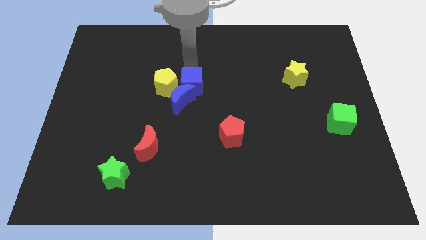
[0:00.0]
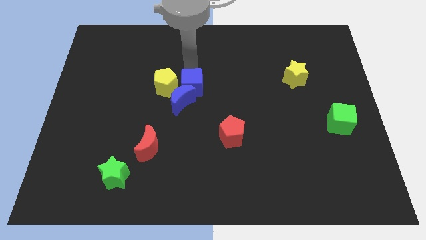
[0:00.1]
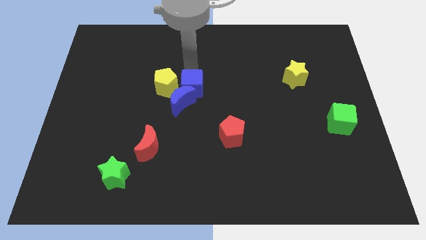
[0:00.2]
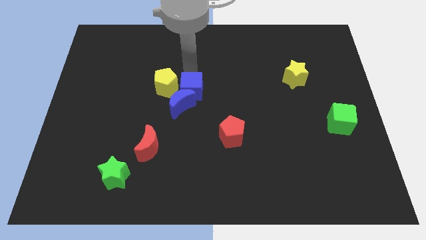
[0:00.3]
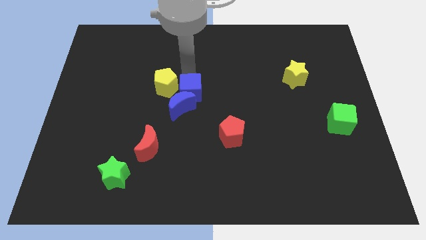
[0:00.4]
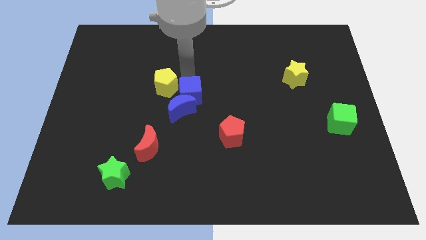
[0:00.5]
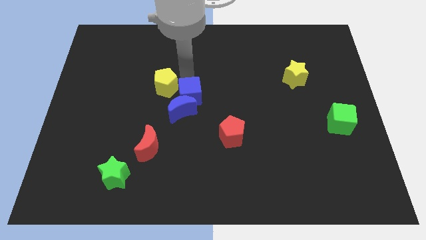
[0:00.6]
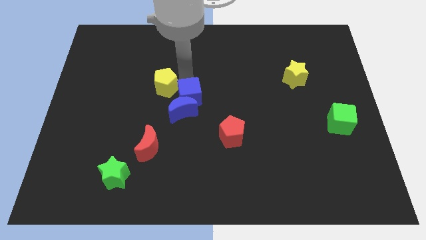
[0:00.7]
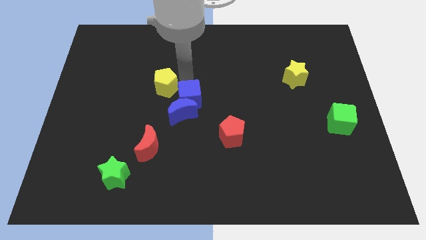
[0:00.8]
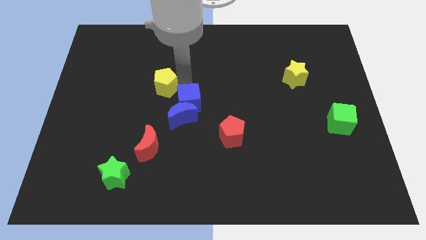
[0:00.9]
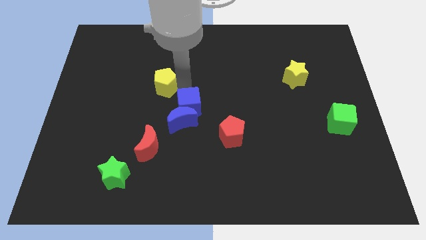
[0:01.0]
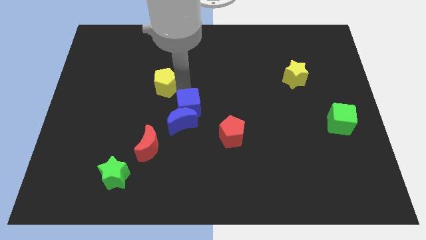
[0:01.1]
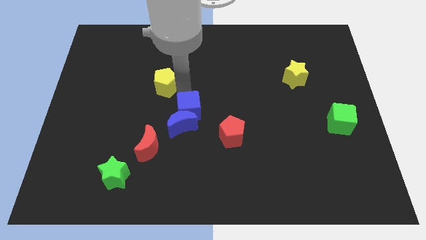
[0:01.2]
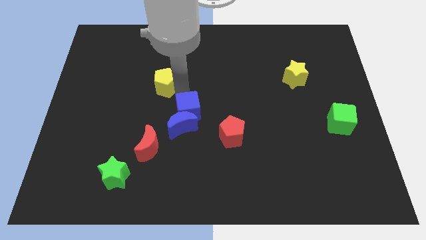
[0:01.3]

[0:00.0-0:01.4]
place blue cube to the center of the board

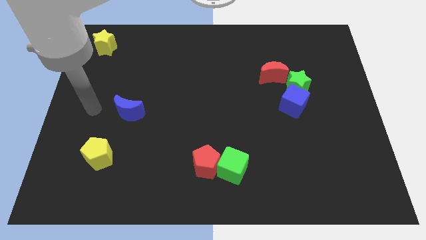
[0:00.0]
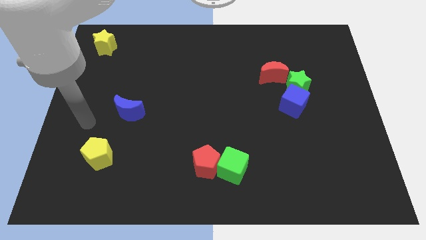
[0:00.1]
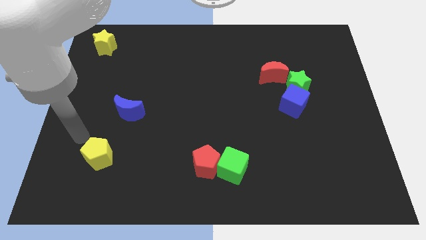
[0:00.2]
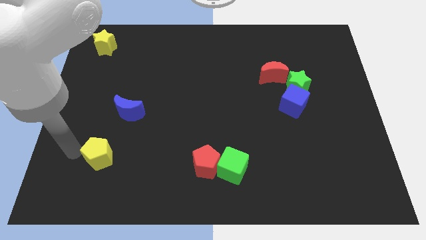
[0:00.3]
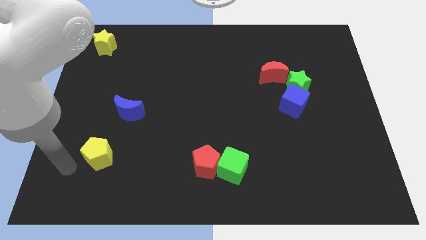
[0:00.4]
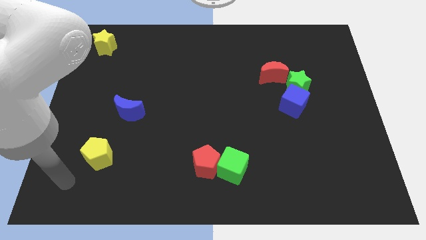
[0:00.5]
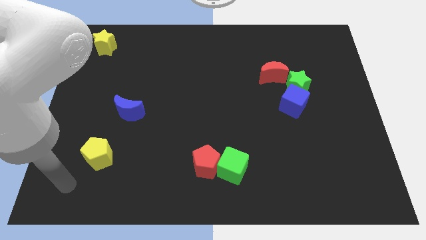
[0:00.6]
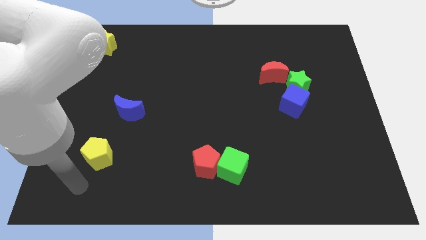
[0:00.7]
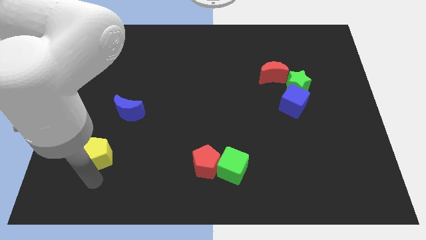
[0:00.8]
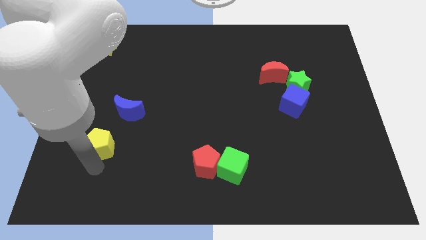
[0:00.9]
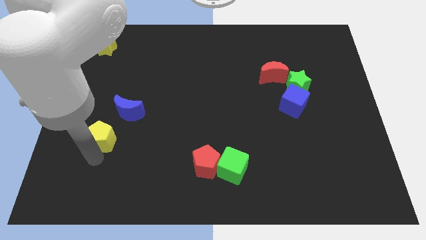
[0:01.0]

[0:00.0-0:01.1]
move the yellow pentagon towards blue crescent

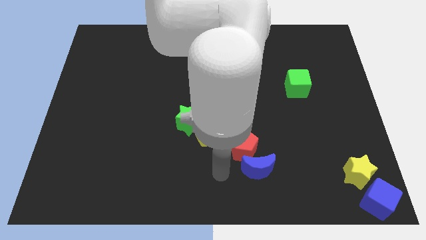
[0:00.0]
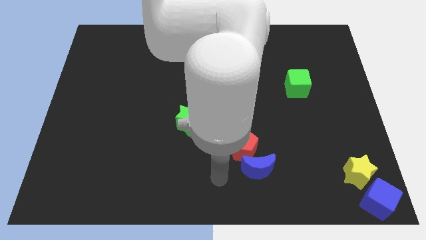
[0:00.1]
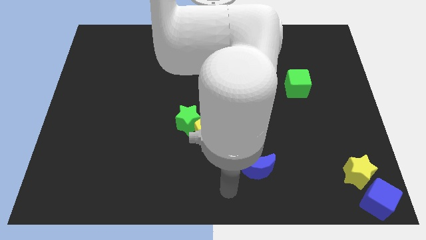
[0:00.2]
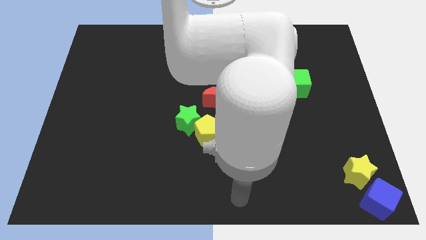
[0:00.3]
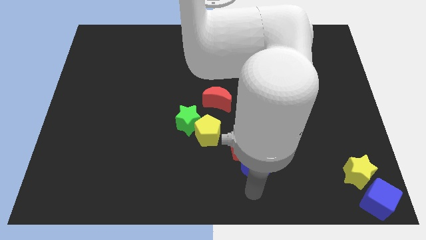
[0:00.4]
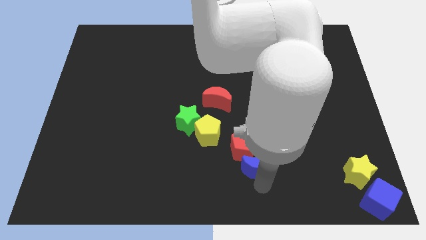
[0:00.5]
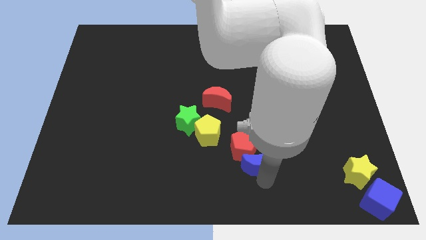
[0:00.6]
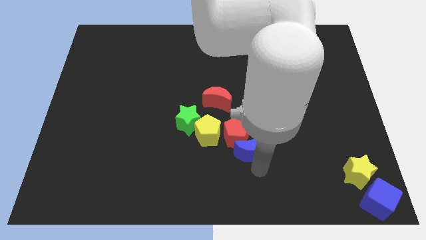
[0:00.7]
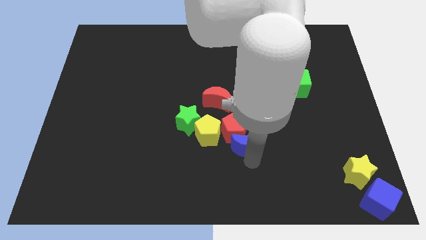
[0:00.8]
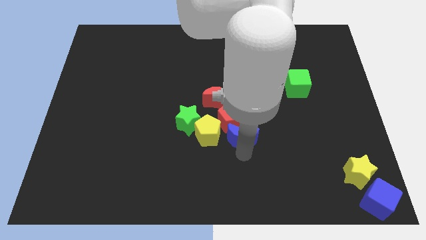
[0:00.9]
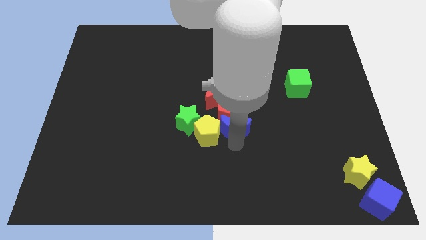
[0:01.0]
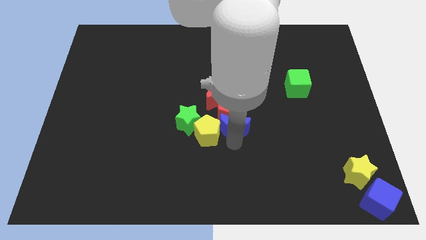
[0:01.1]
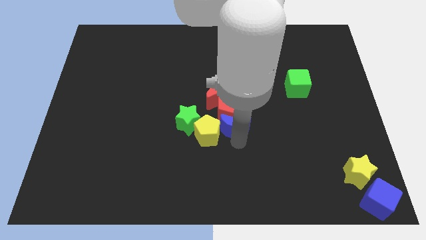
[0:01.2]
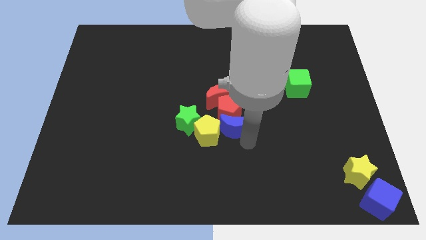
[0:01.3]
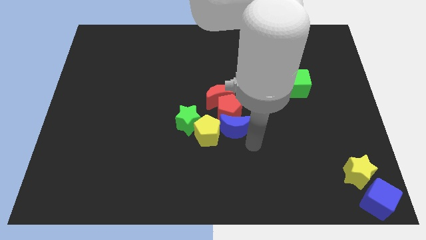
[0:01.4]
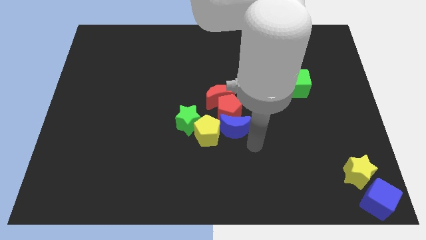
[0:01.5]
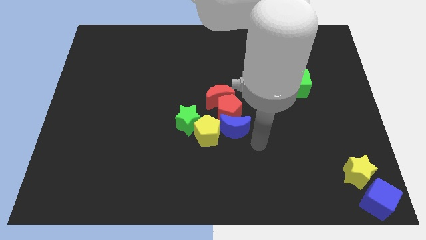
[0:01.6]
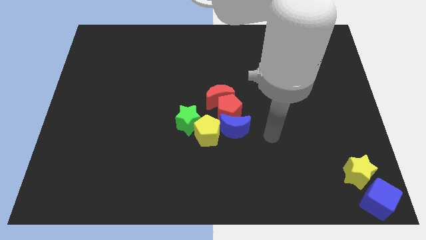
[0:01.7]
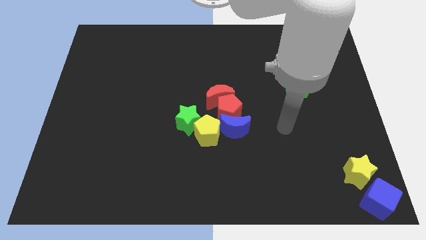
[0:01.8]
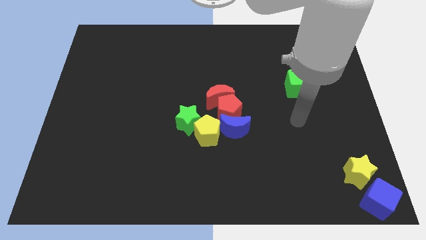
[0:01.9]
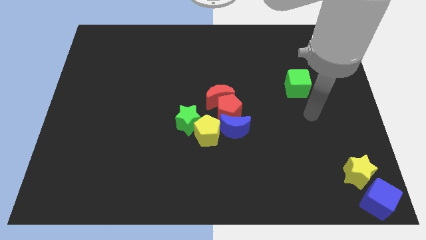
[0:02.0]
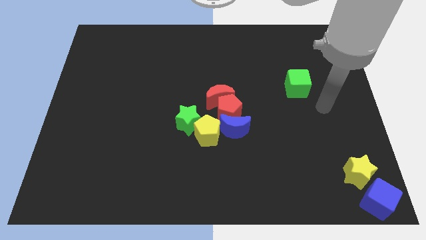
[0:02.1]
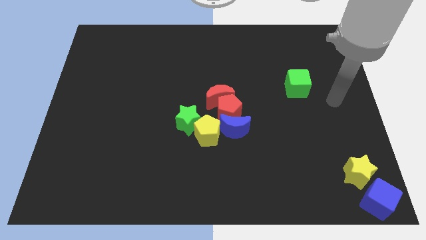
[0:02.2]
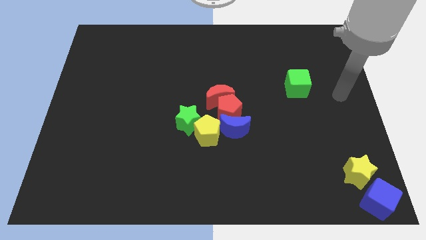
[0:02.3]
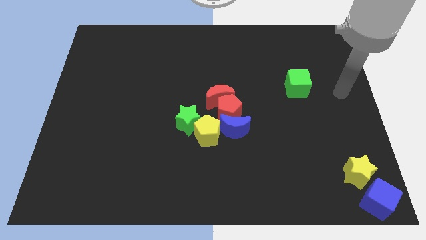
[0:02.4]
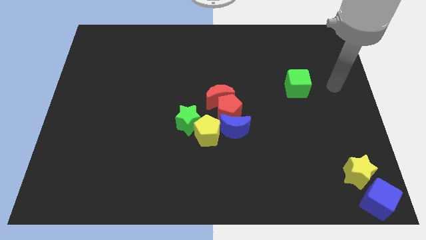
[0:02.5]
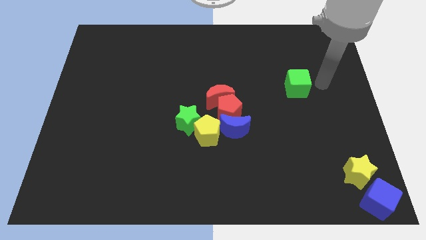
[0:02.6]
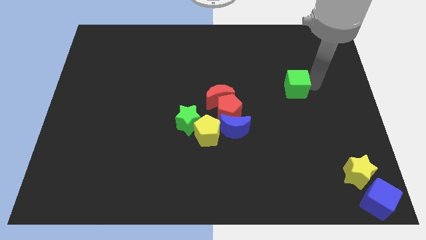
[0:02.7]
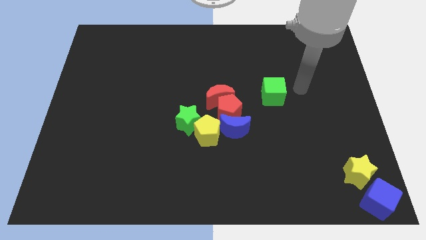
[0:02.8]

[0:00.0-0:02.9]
push the blue crescent and red pentagon into the red crescent

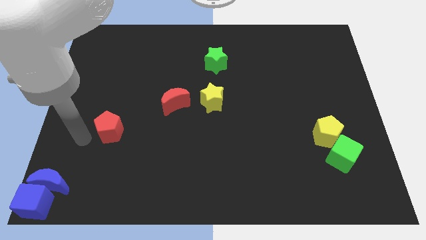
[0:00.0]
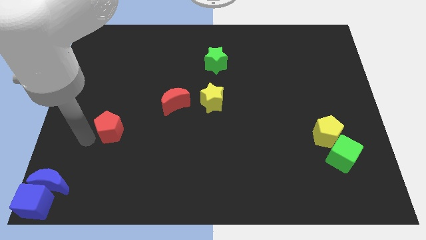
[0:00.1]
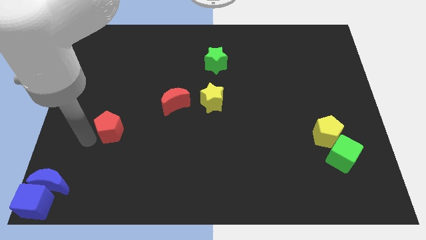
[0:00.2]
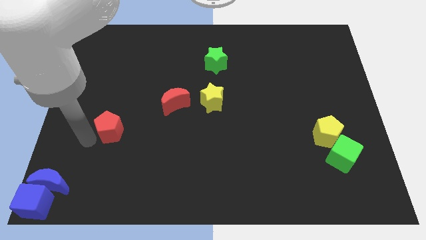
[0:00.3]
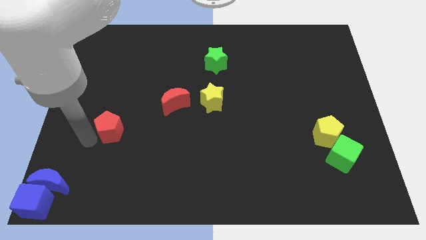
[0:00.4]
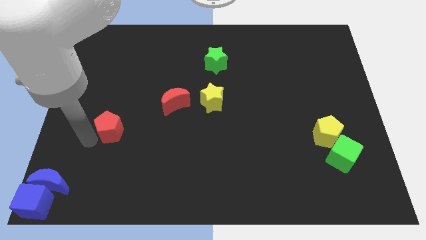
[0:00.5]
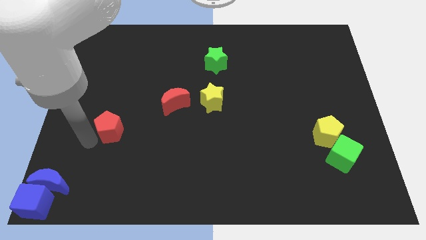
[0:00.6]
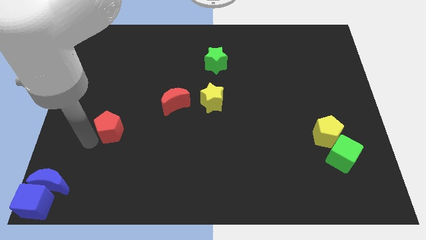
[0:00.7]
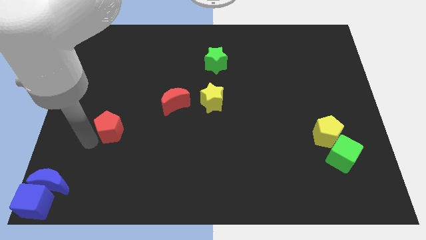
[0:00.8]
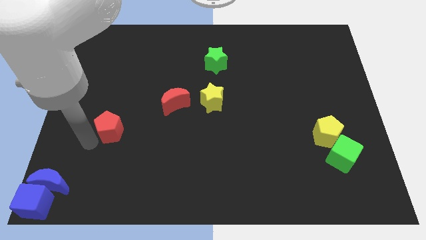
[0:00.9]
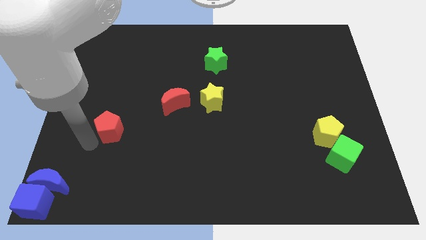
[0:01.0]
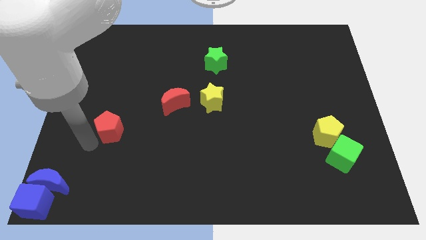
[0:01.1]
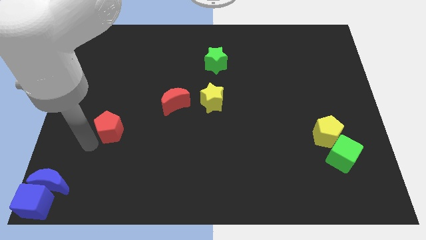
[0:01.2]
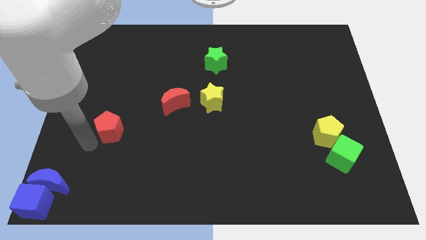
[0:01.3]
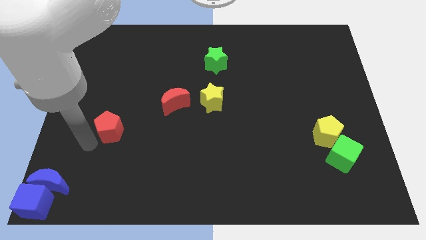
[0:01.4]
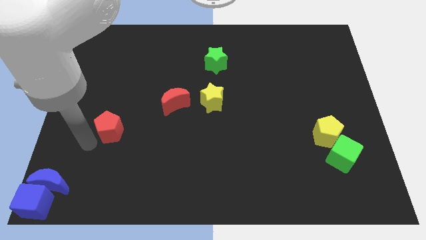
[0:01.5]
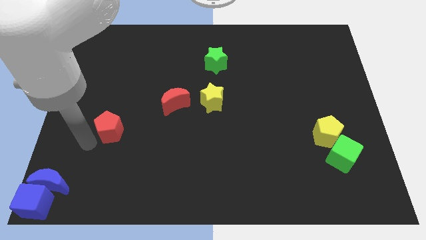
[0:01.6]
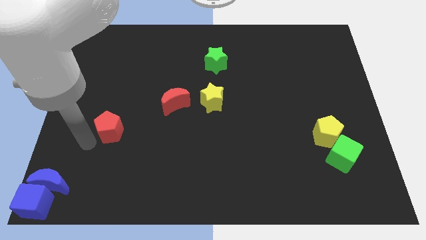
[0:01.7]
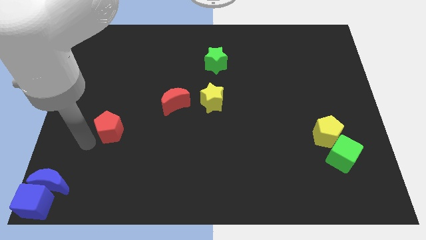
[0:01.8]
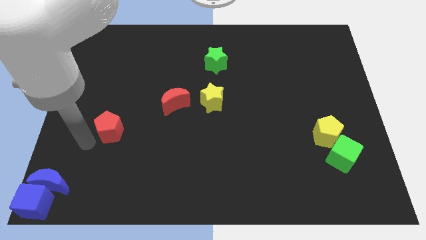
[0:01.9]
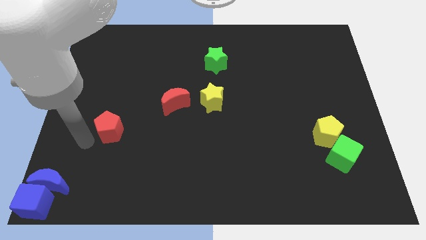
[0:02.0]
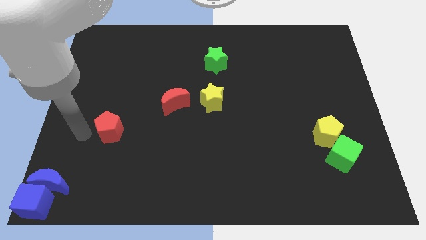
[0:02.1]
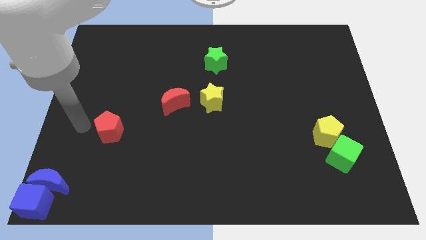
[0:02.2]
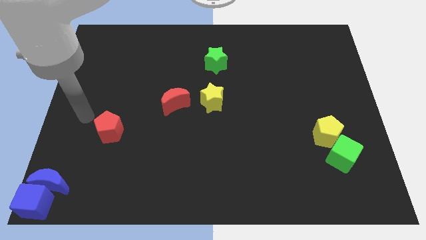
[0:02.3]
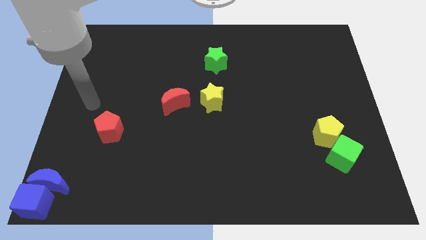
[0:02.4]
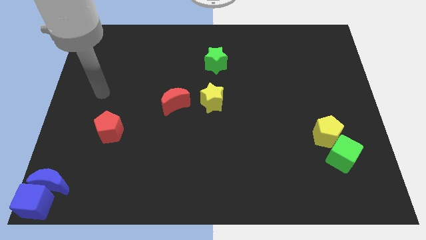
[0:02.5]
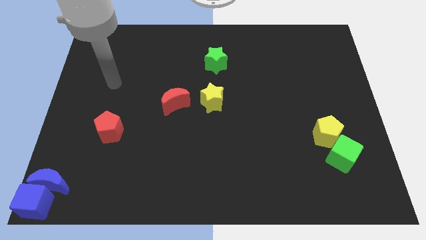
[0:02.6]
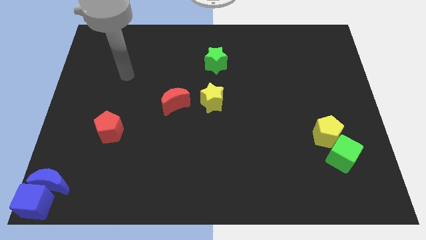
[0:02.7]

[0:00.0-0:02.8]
point your arm above the red pentagon

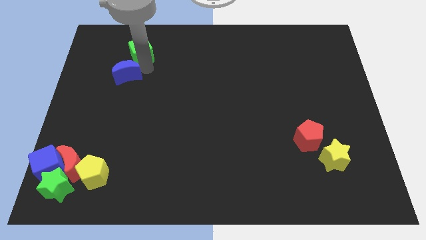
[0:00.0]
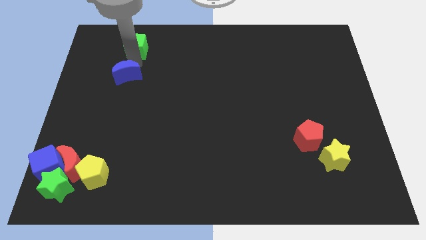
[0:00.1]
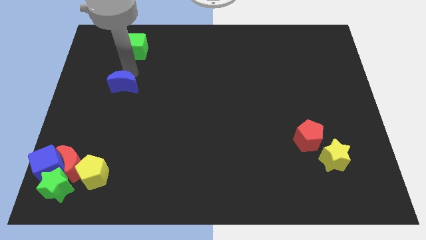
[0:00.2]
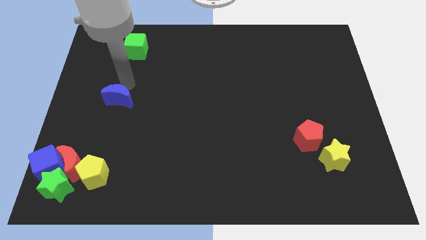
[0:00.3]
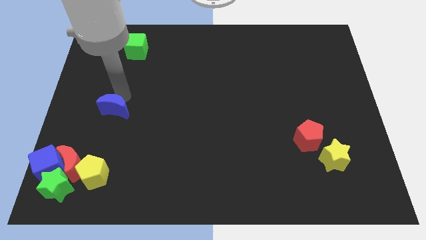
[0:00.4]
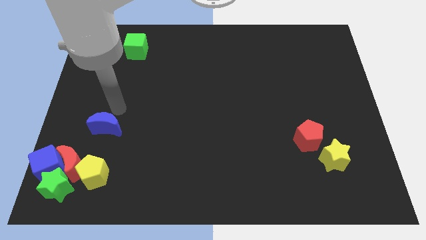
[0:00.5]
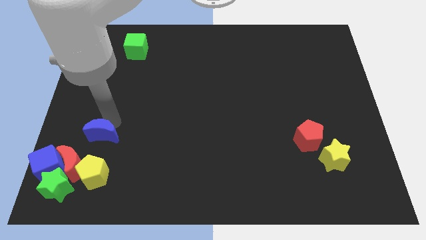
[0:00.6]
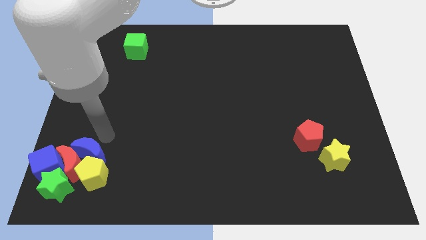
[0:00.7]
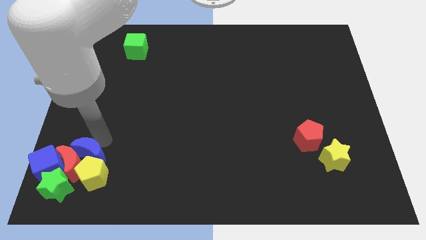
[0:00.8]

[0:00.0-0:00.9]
separate the blue crescent from the green cube
